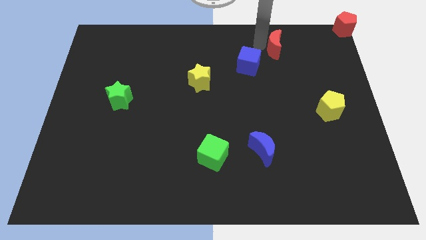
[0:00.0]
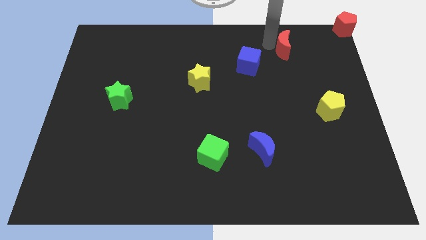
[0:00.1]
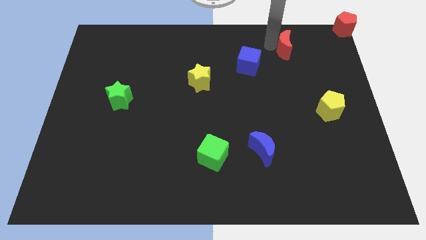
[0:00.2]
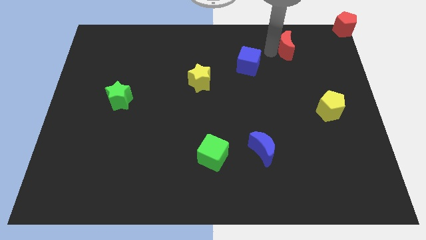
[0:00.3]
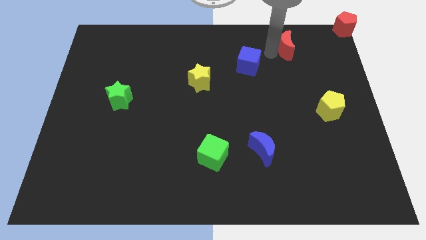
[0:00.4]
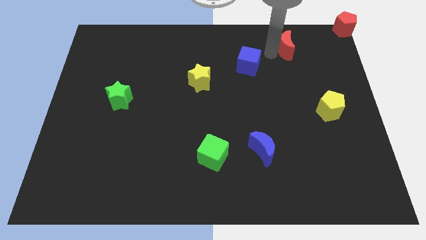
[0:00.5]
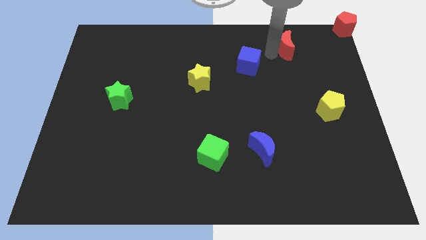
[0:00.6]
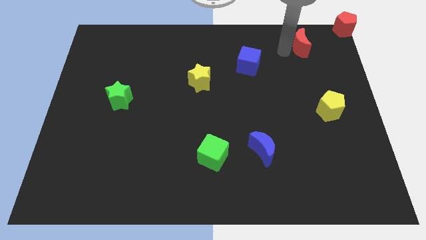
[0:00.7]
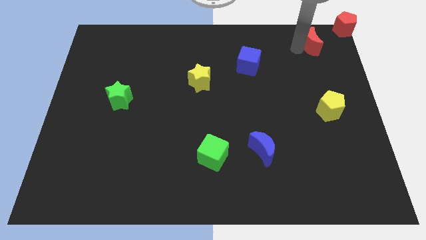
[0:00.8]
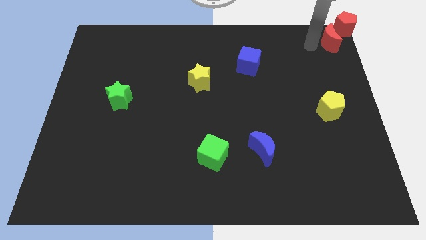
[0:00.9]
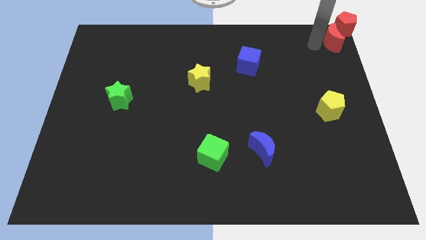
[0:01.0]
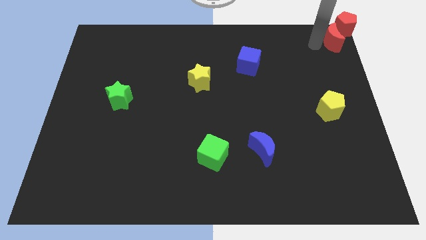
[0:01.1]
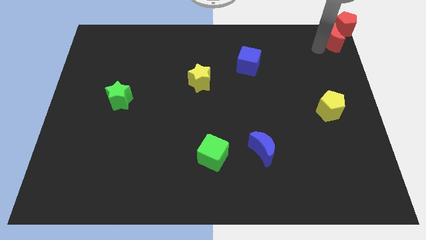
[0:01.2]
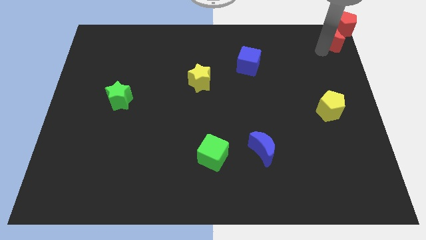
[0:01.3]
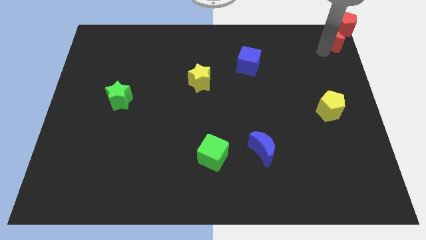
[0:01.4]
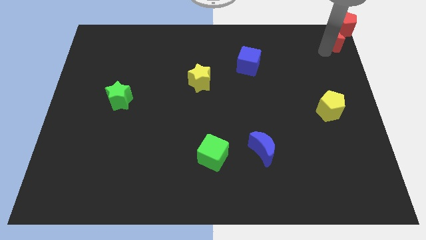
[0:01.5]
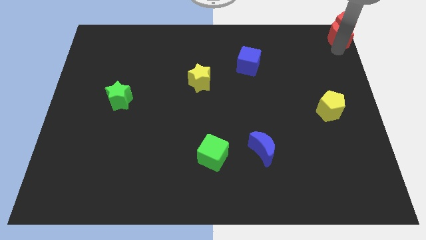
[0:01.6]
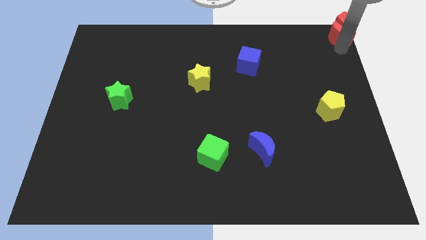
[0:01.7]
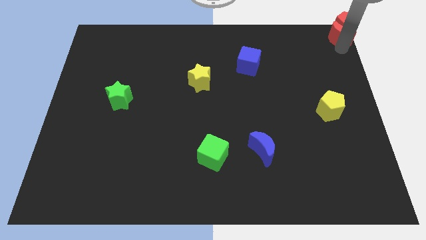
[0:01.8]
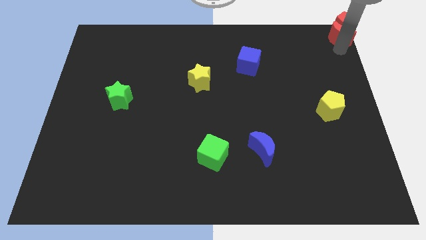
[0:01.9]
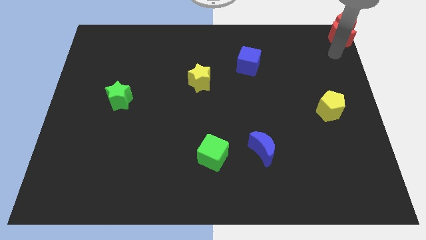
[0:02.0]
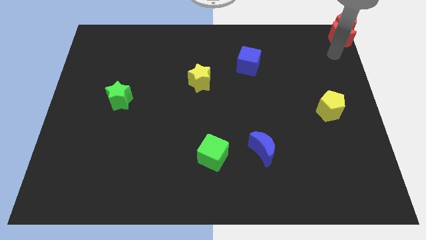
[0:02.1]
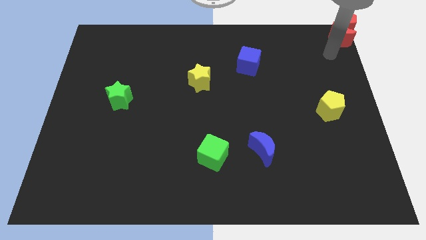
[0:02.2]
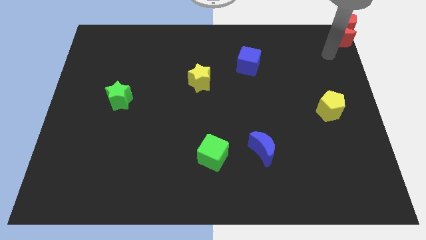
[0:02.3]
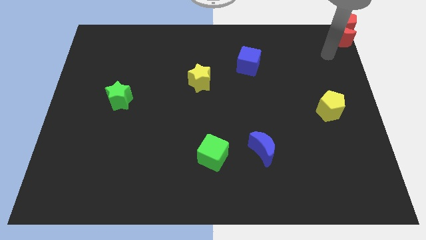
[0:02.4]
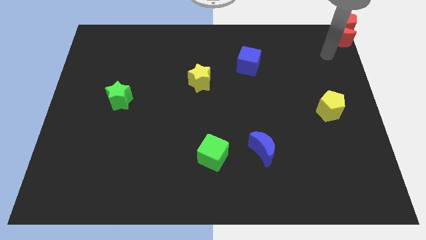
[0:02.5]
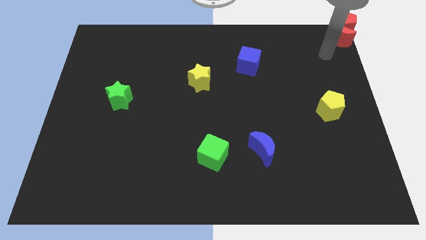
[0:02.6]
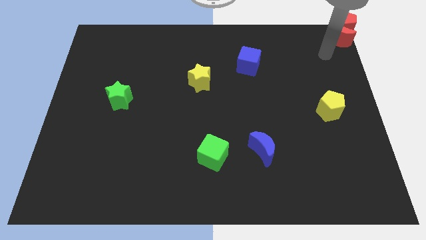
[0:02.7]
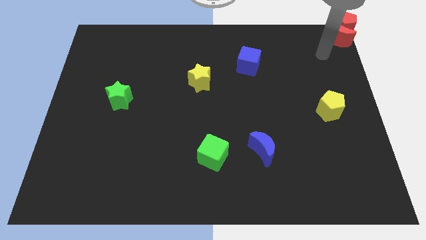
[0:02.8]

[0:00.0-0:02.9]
push the red crescent to the bottom of the red pentagon

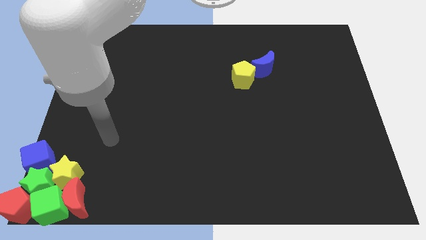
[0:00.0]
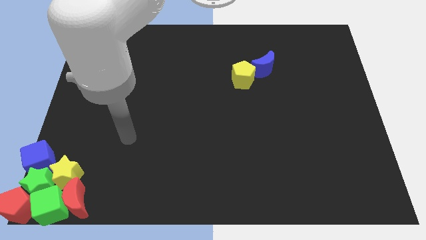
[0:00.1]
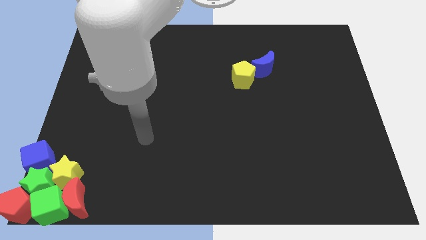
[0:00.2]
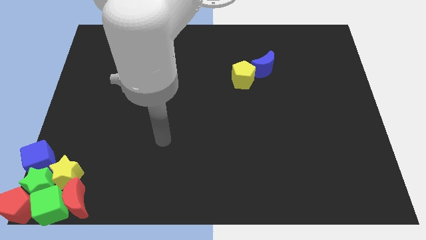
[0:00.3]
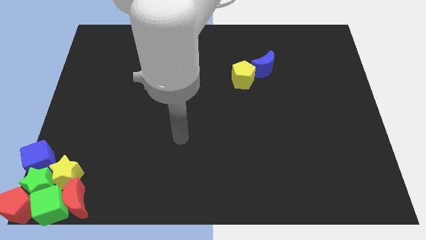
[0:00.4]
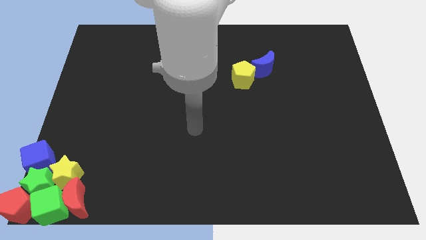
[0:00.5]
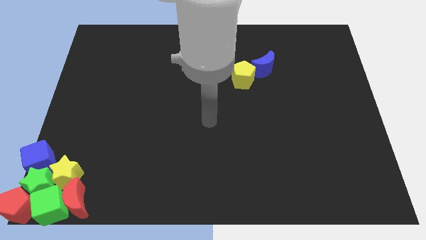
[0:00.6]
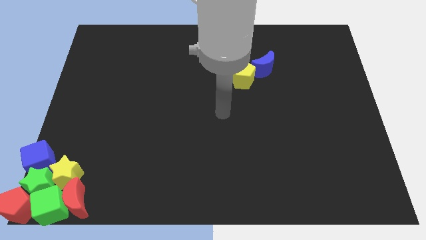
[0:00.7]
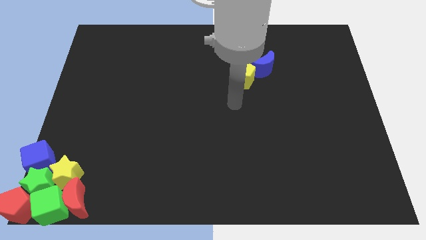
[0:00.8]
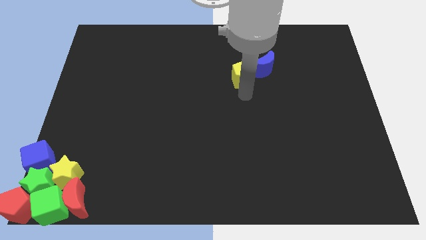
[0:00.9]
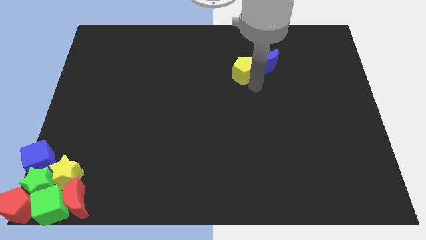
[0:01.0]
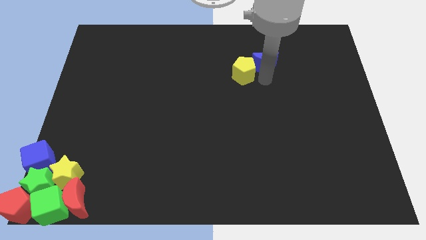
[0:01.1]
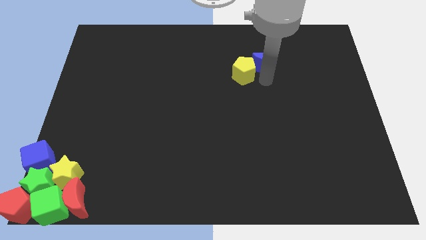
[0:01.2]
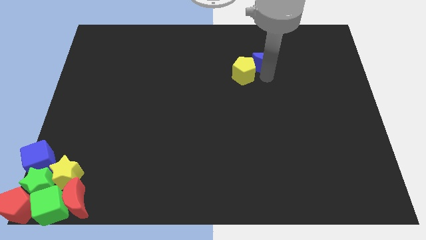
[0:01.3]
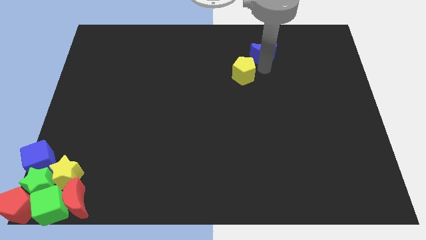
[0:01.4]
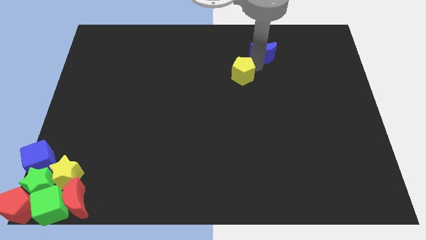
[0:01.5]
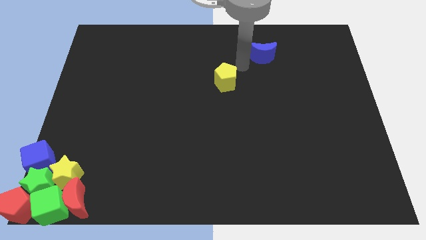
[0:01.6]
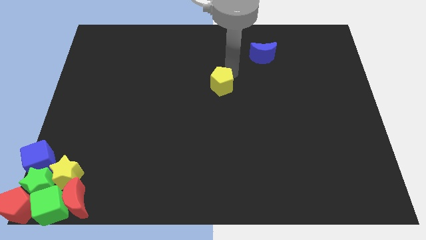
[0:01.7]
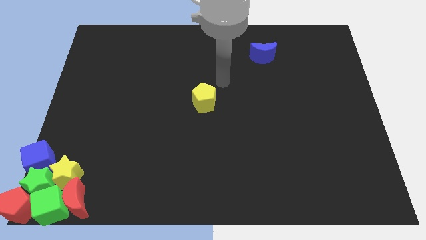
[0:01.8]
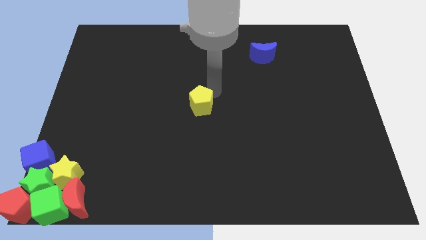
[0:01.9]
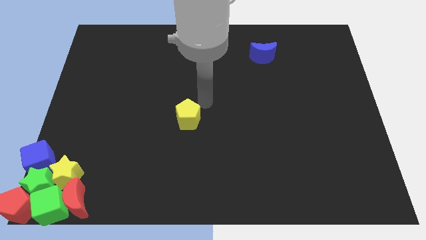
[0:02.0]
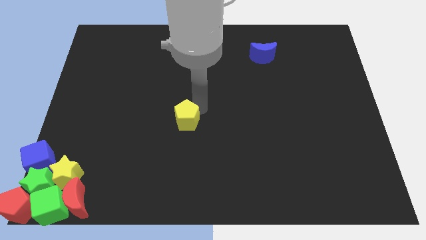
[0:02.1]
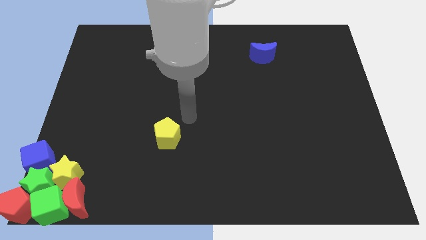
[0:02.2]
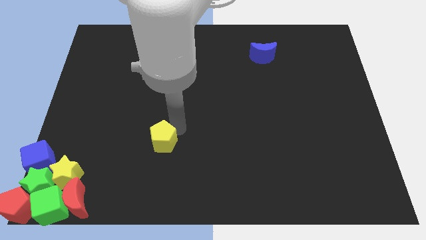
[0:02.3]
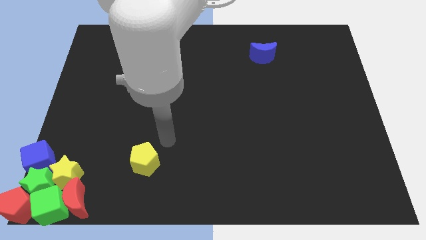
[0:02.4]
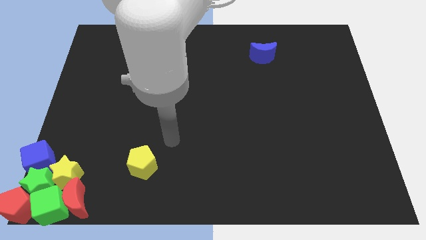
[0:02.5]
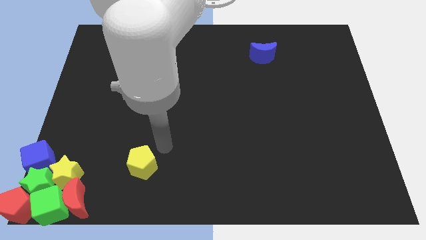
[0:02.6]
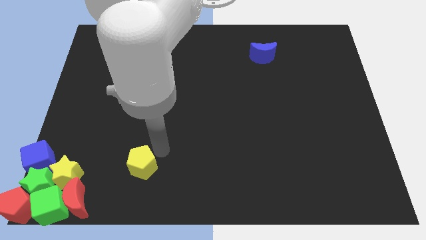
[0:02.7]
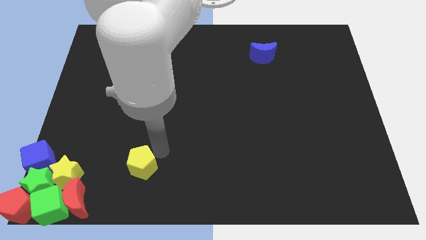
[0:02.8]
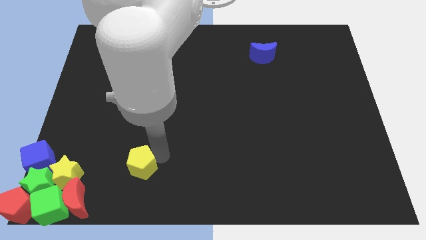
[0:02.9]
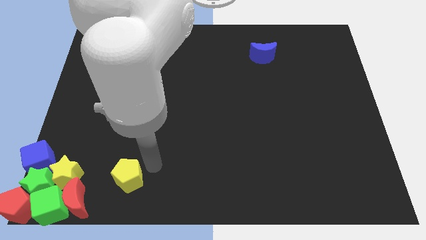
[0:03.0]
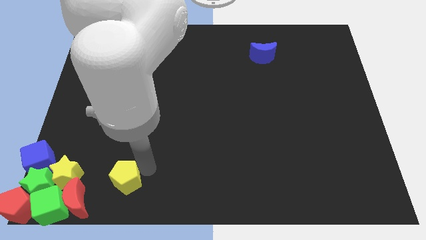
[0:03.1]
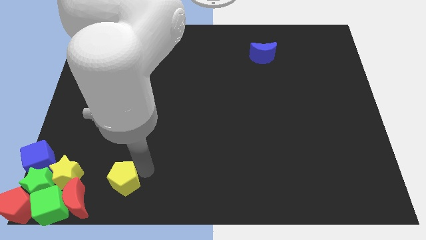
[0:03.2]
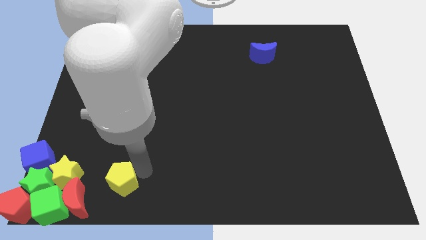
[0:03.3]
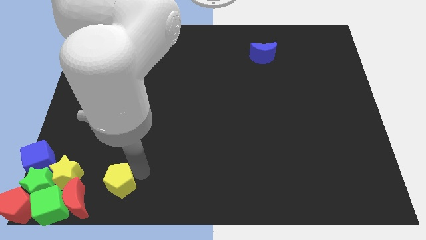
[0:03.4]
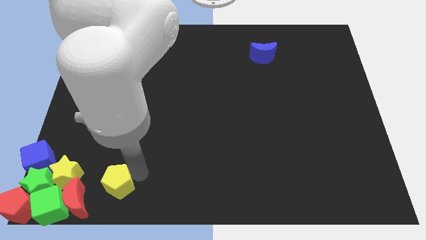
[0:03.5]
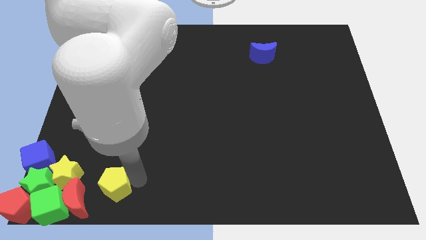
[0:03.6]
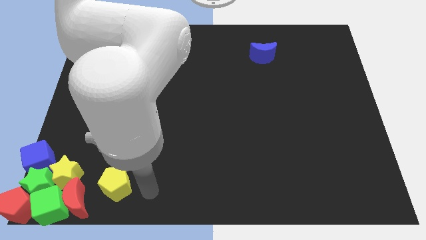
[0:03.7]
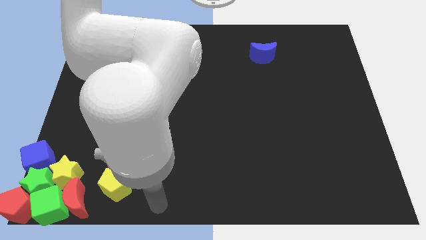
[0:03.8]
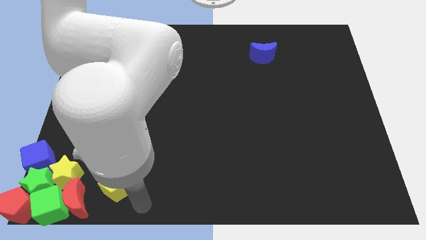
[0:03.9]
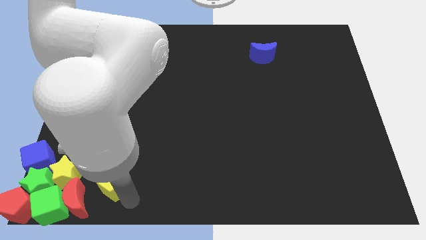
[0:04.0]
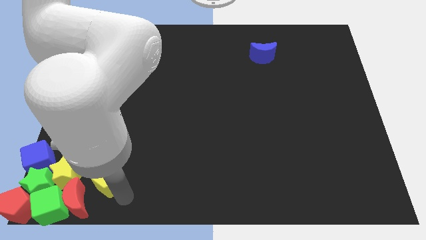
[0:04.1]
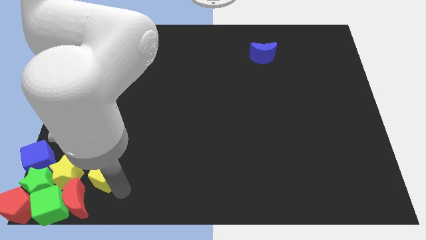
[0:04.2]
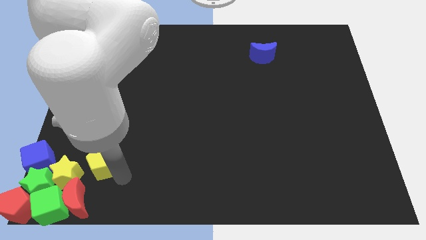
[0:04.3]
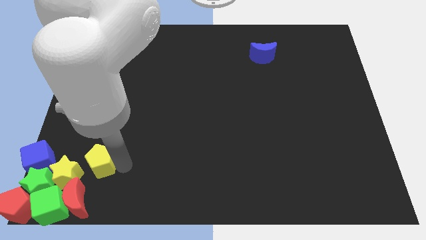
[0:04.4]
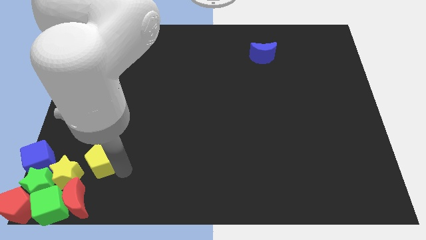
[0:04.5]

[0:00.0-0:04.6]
push the yellow pentagon to the right of the yellow star

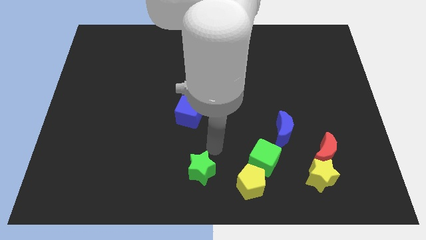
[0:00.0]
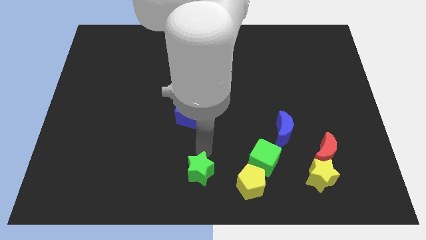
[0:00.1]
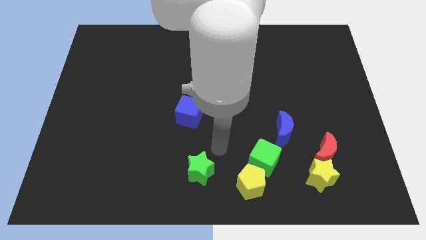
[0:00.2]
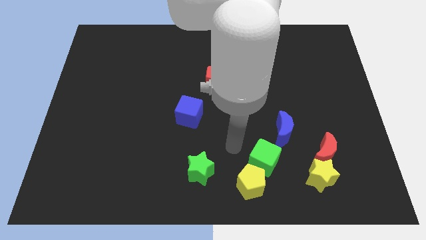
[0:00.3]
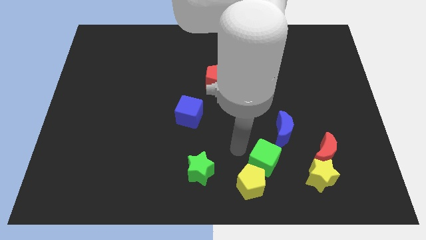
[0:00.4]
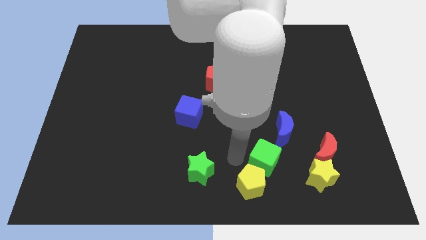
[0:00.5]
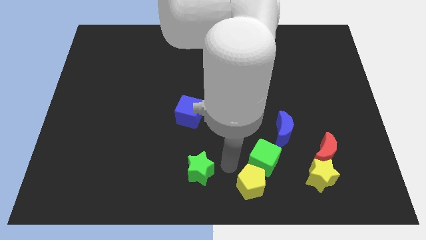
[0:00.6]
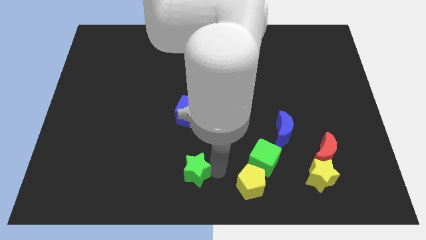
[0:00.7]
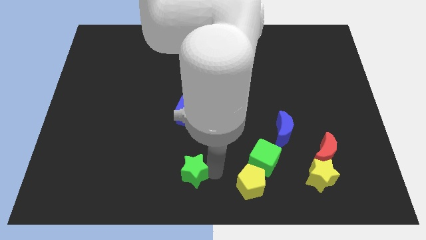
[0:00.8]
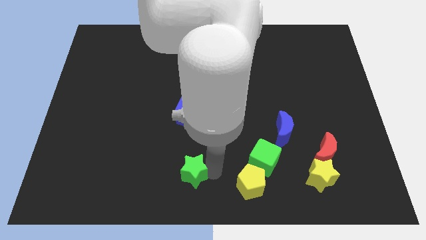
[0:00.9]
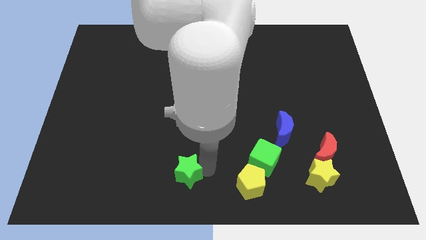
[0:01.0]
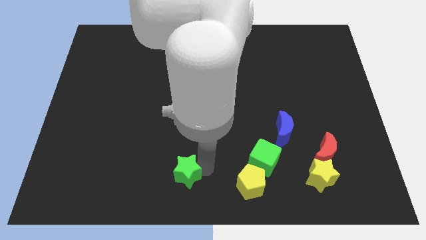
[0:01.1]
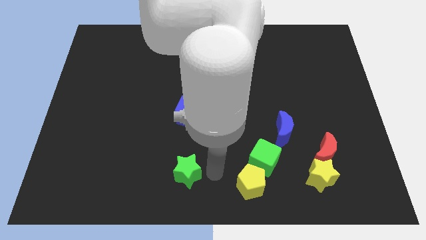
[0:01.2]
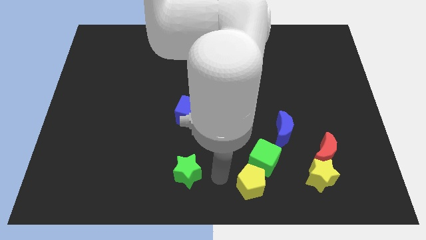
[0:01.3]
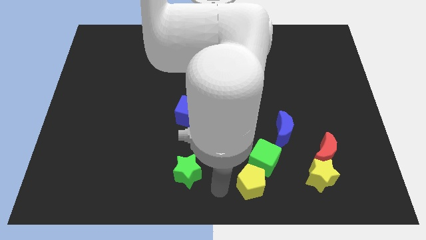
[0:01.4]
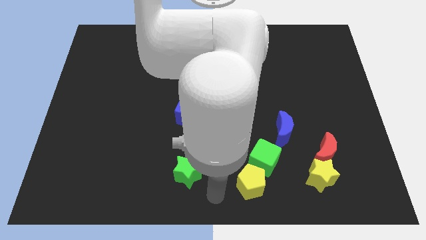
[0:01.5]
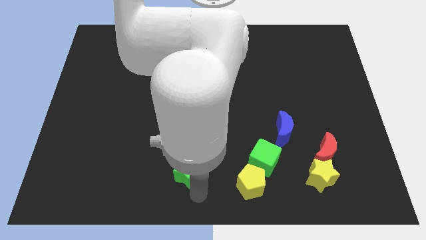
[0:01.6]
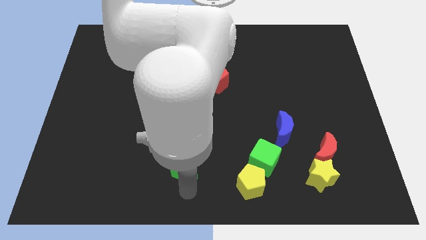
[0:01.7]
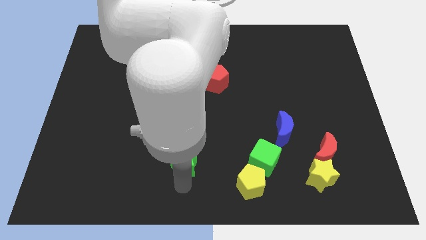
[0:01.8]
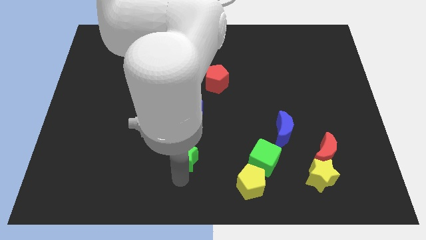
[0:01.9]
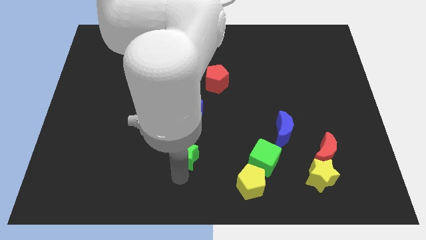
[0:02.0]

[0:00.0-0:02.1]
move the green star towards the blue cube
